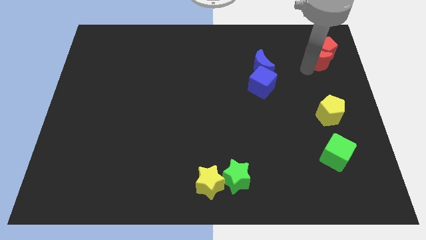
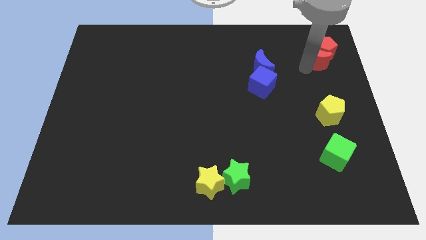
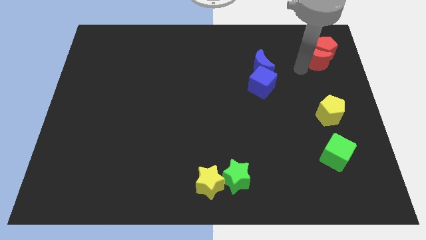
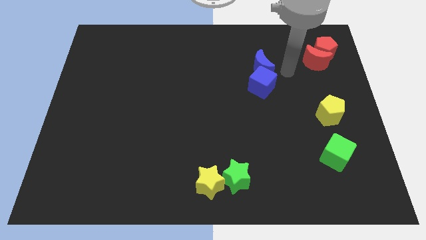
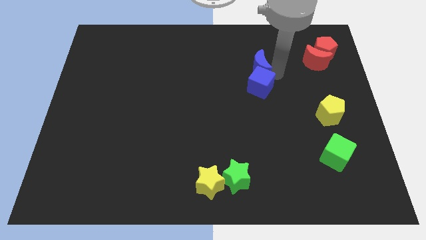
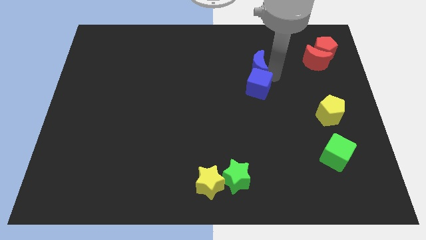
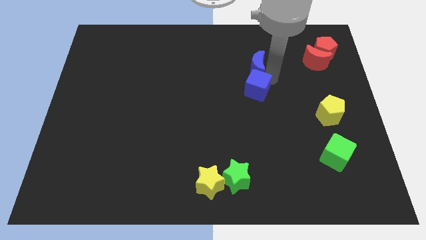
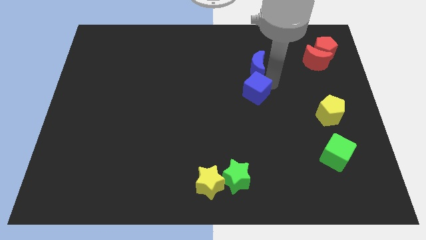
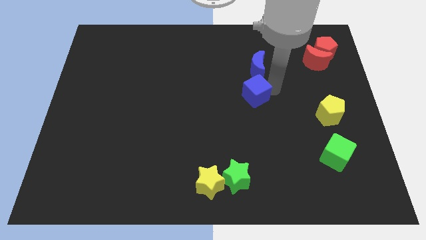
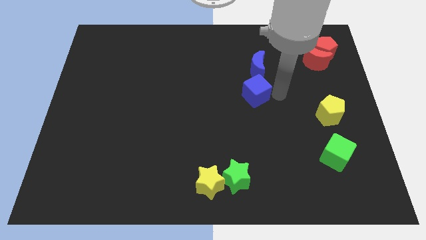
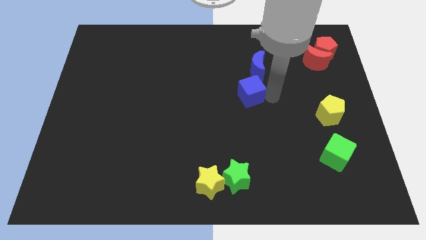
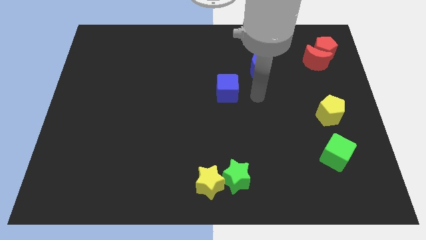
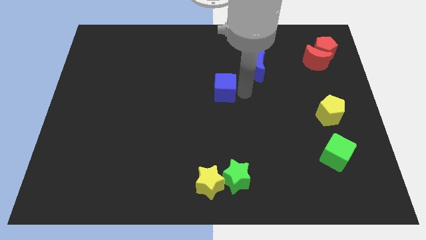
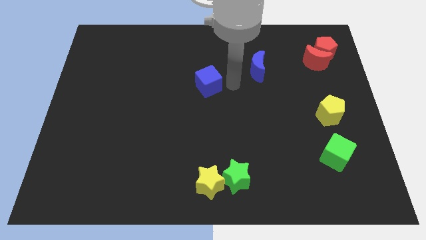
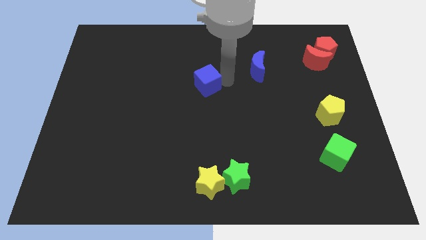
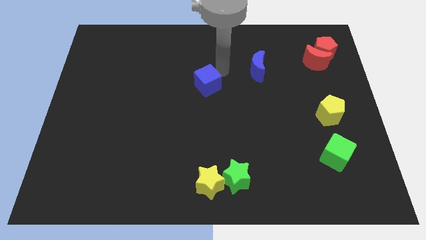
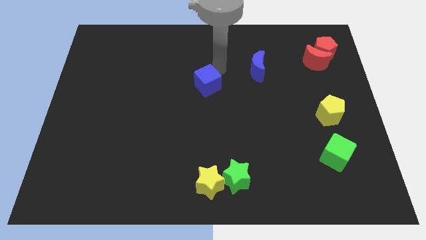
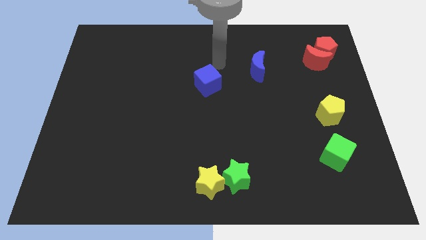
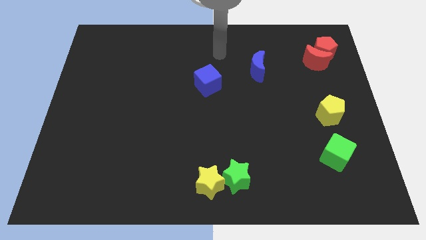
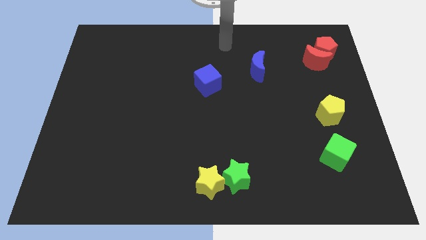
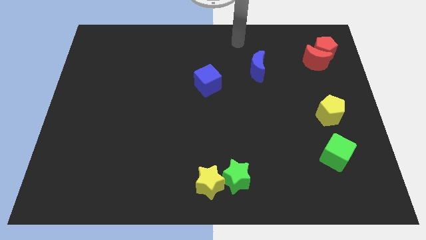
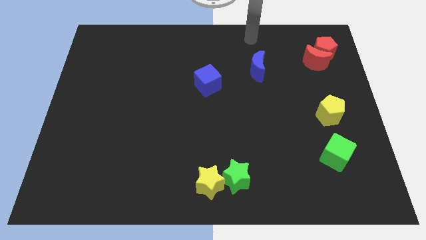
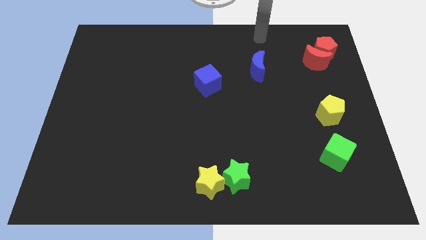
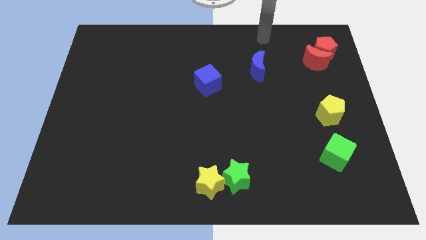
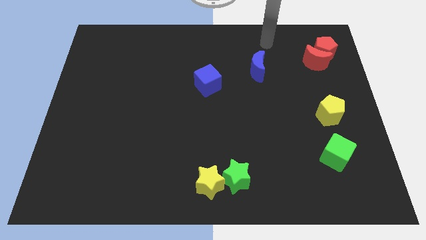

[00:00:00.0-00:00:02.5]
slightly push blue cube to the top center of the board

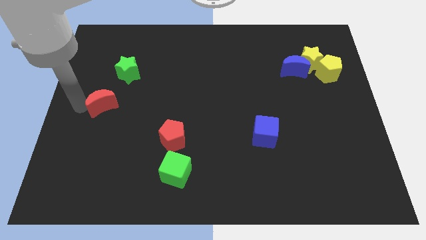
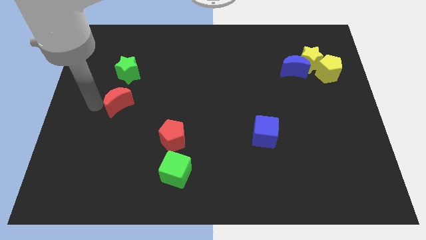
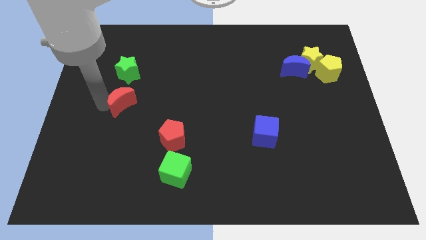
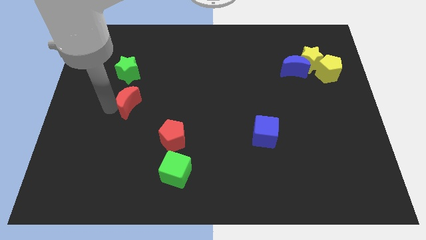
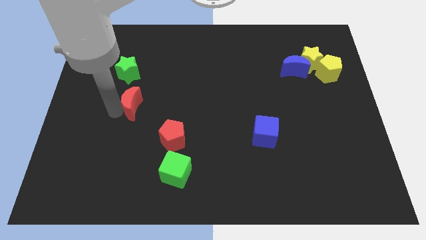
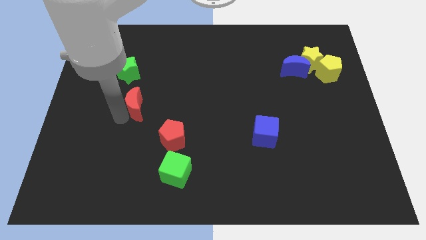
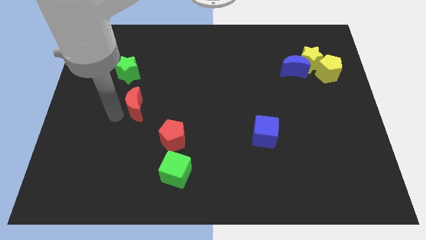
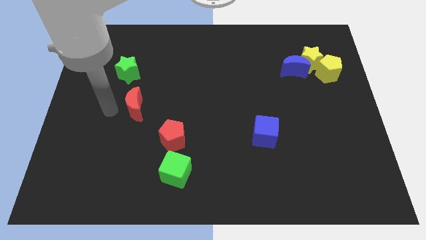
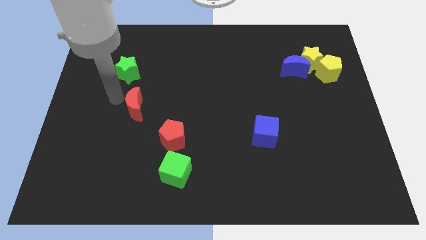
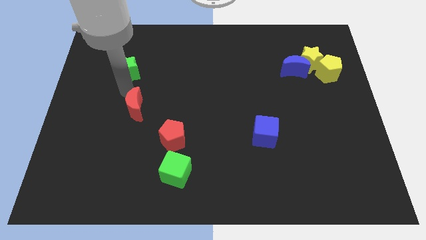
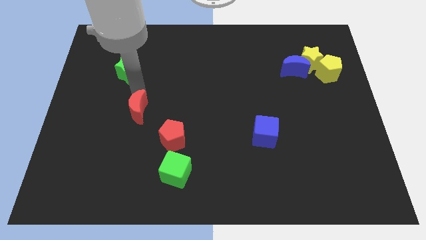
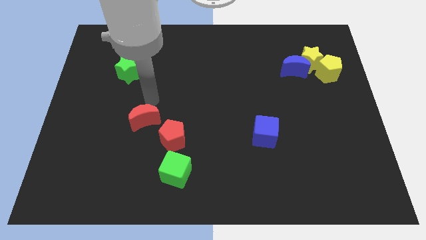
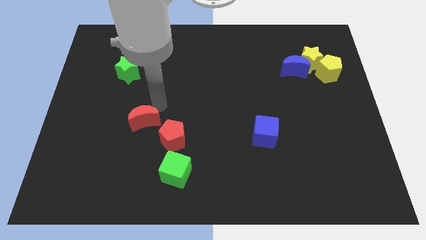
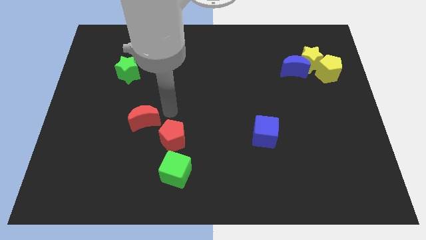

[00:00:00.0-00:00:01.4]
place the red moon diagonally bottom right to the red pentagon

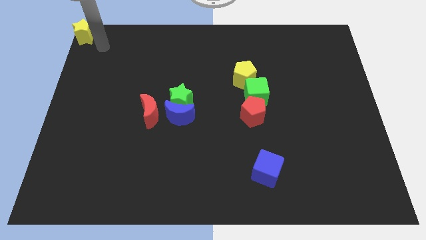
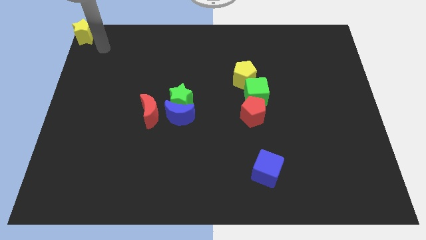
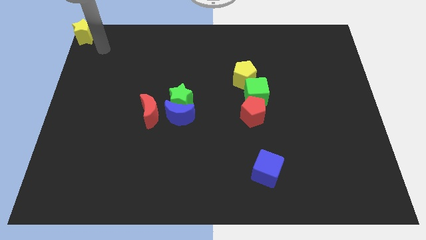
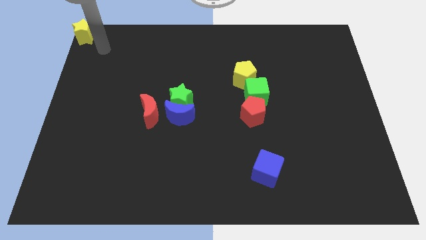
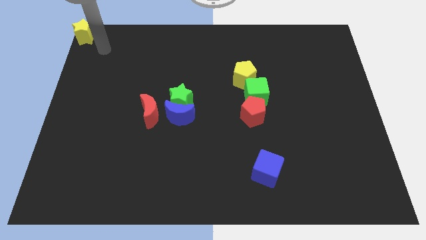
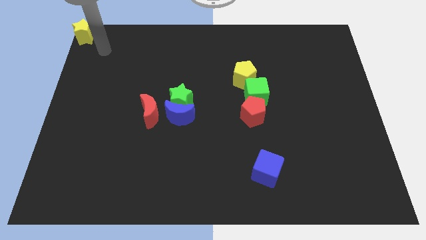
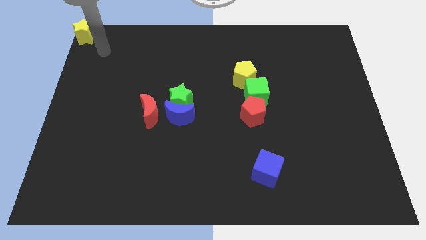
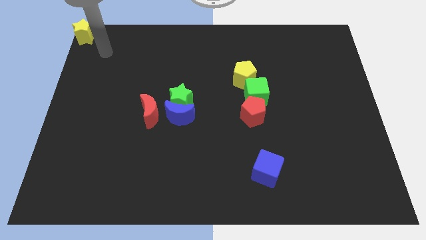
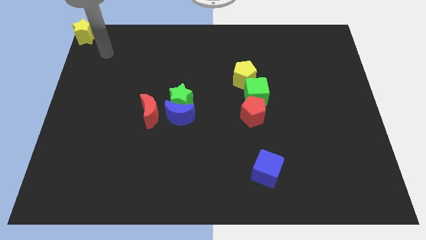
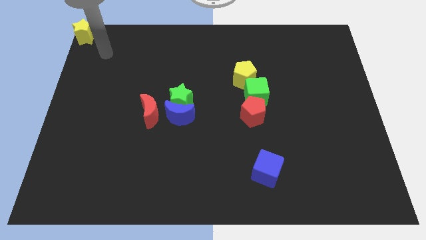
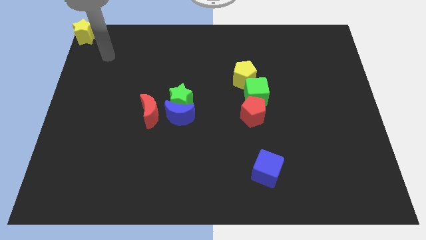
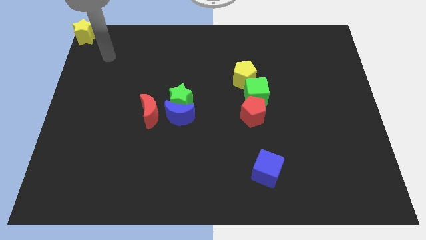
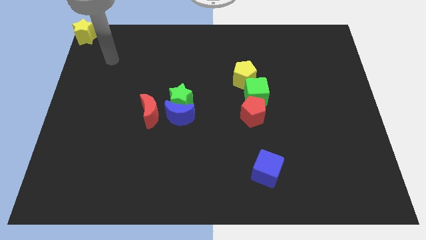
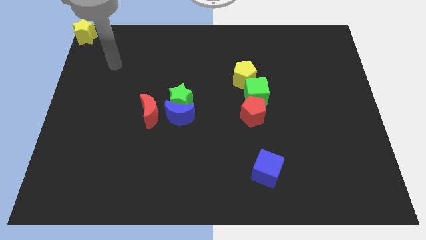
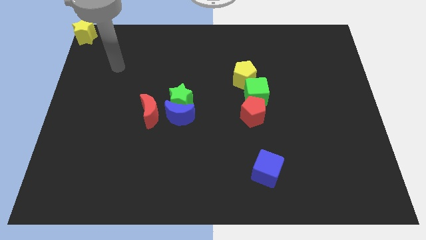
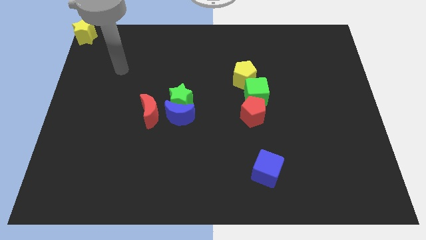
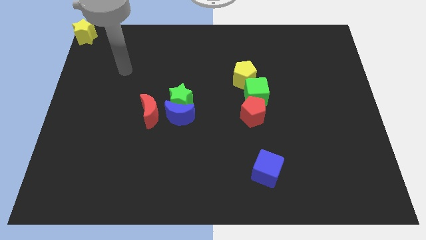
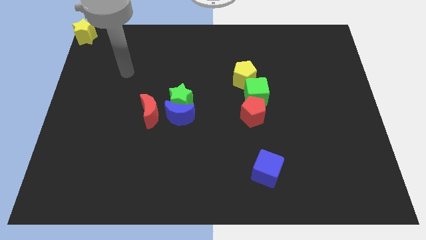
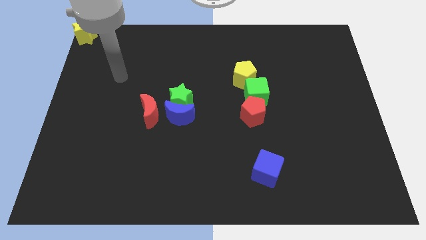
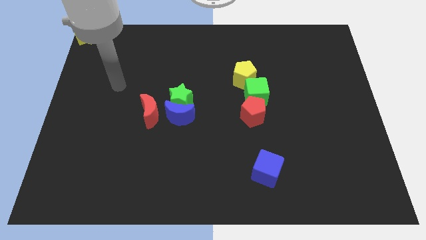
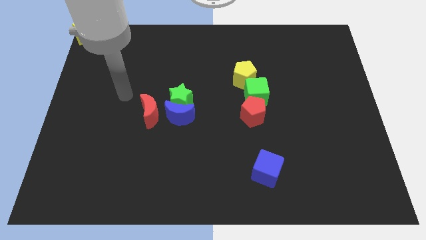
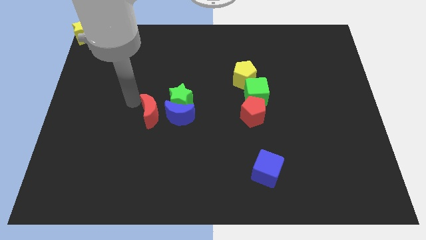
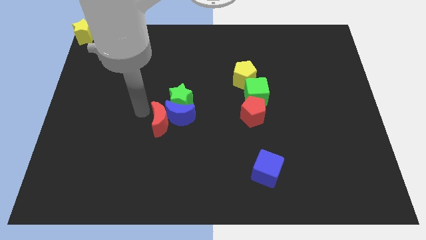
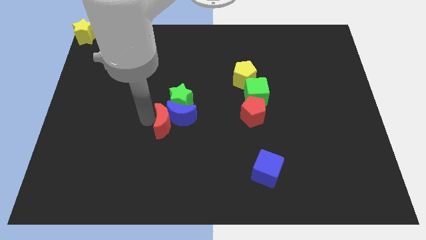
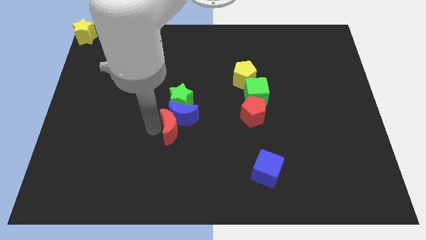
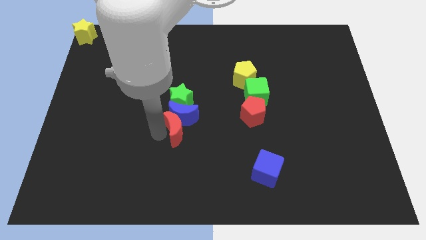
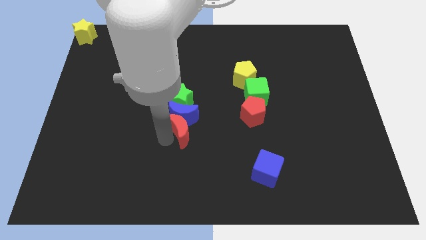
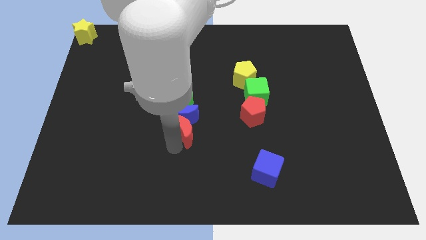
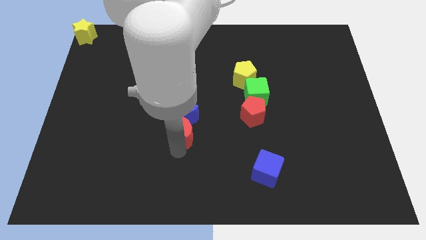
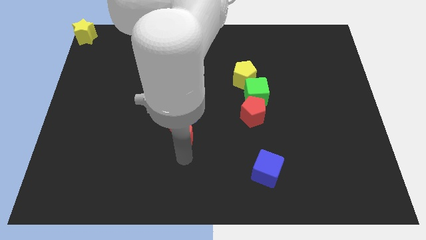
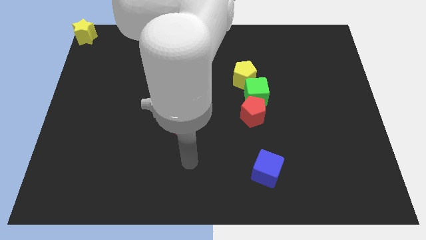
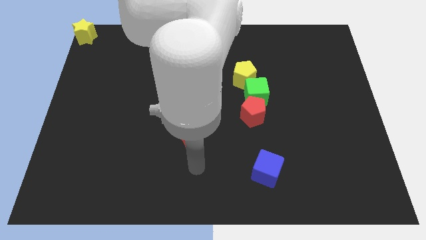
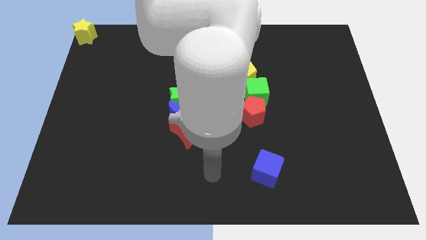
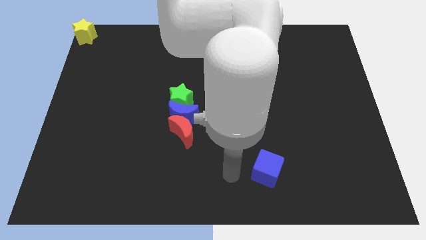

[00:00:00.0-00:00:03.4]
push the red crescent vertically below the blue moon

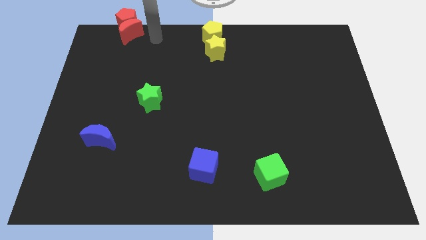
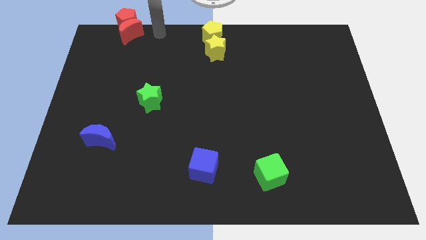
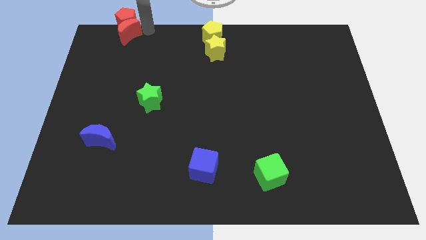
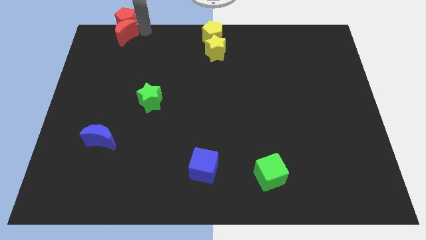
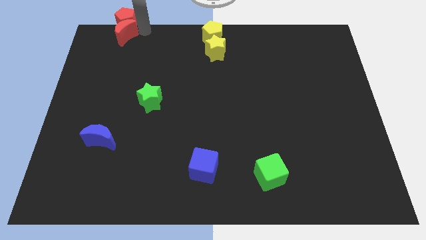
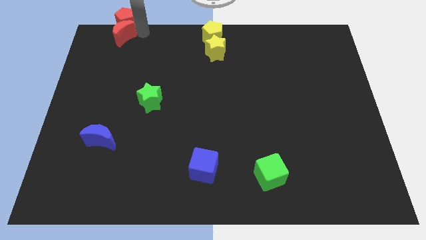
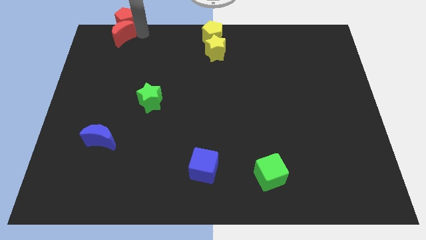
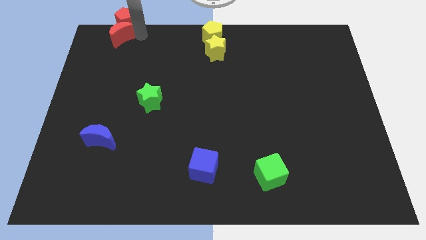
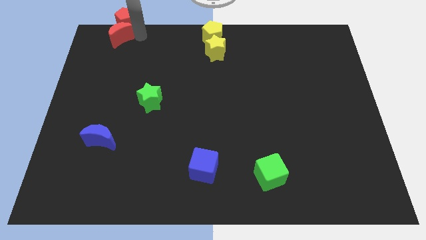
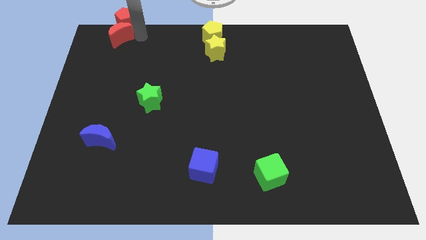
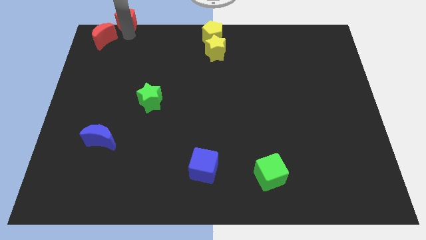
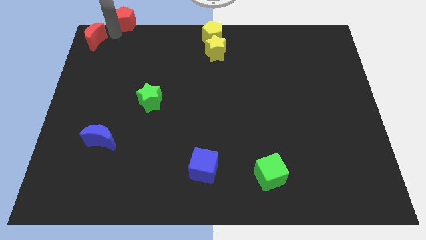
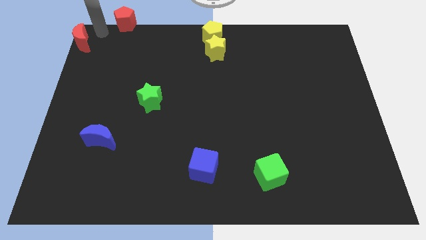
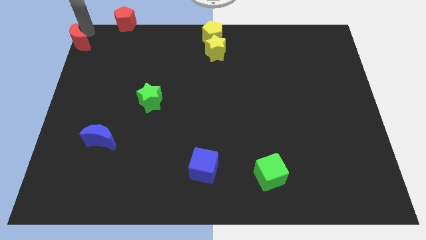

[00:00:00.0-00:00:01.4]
separate the red moon from the red pentagon
